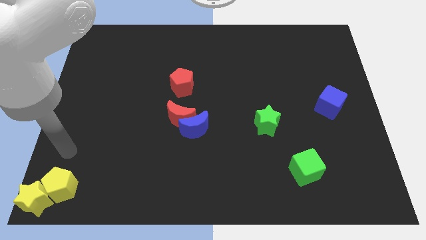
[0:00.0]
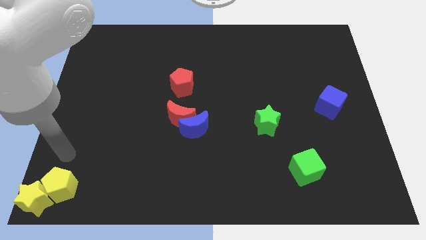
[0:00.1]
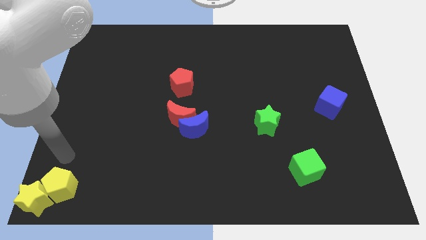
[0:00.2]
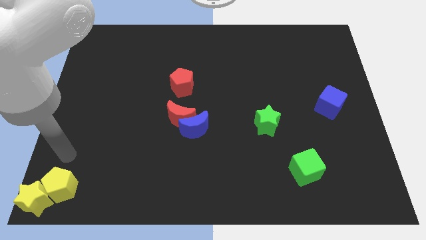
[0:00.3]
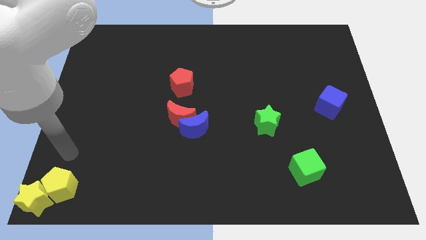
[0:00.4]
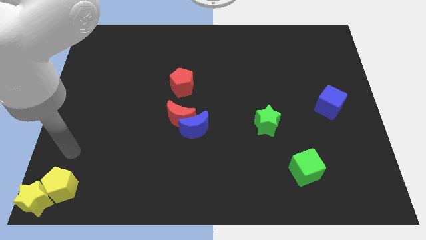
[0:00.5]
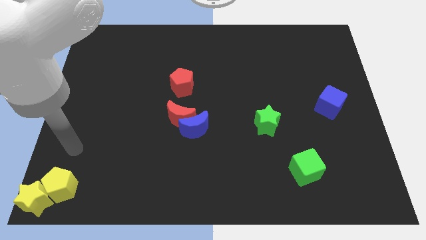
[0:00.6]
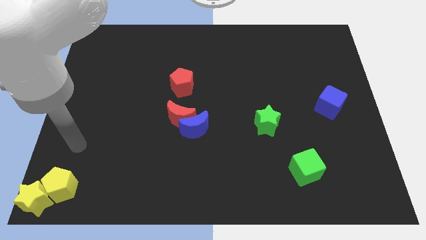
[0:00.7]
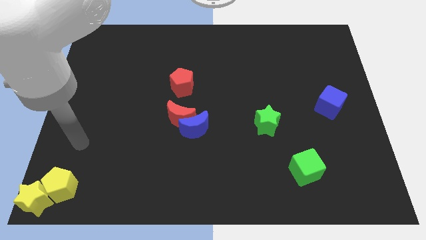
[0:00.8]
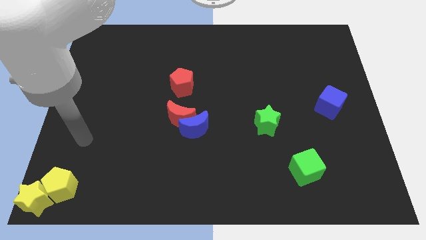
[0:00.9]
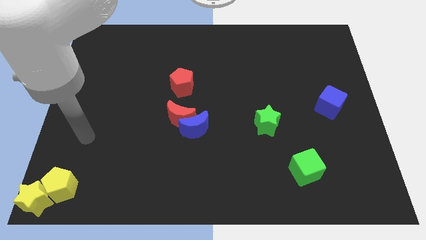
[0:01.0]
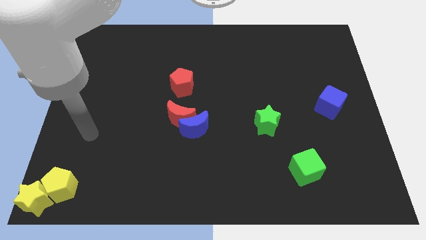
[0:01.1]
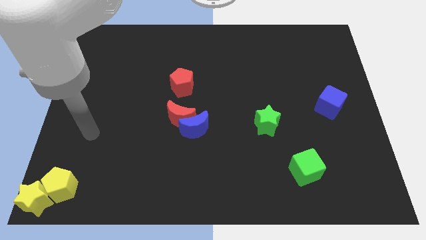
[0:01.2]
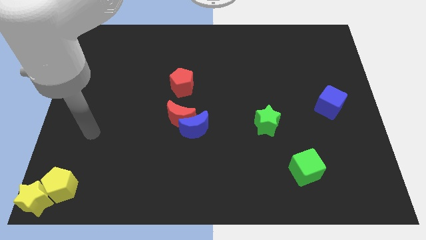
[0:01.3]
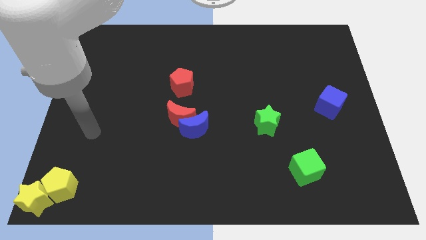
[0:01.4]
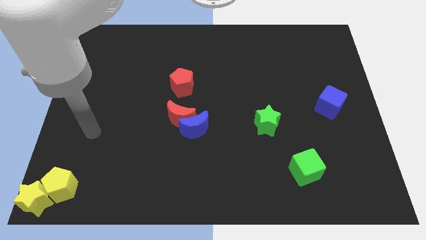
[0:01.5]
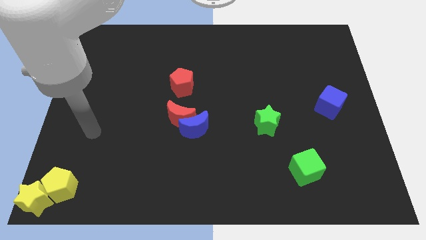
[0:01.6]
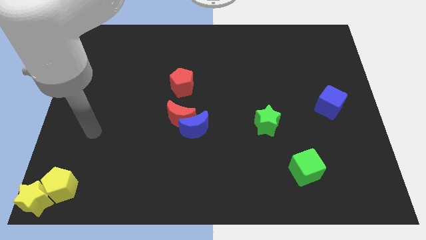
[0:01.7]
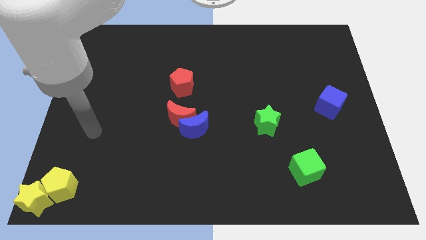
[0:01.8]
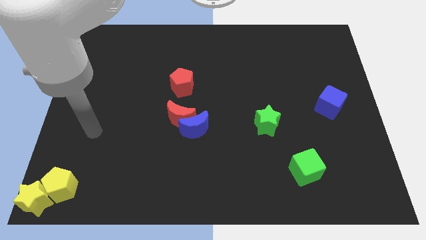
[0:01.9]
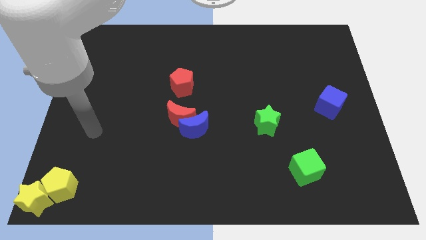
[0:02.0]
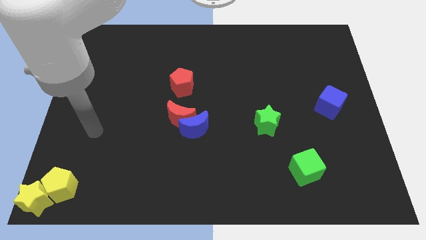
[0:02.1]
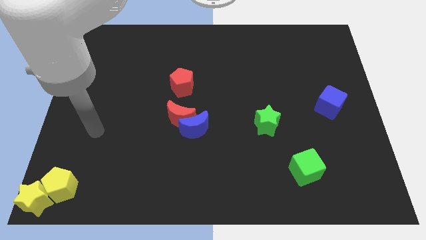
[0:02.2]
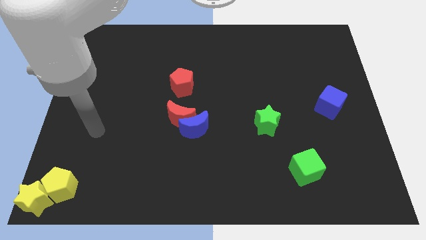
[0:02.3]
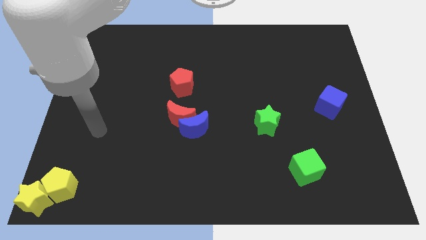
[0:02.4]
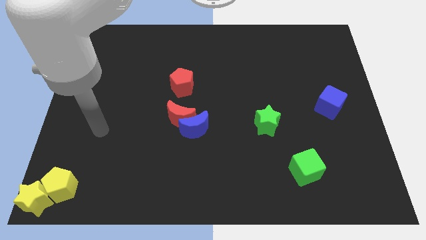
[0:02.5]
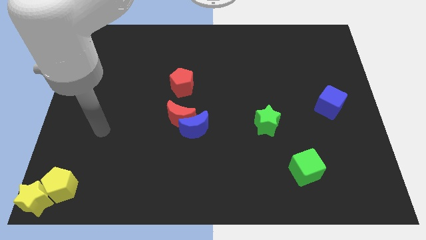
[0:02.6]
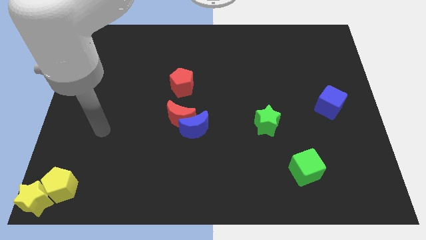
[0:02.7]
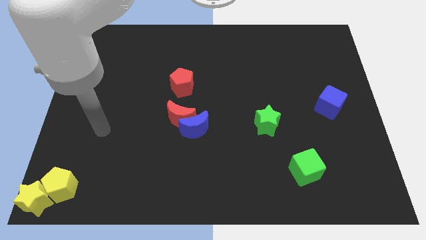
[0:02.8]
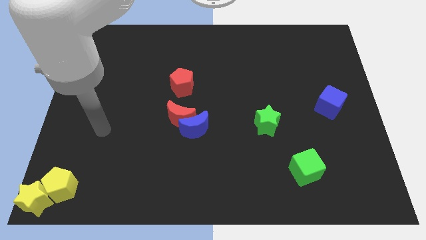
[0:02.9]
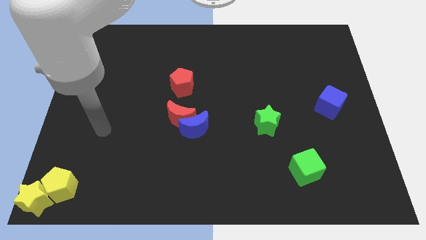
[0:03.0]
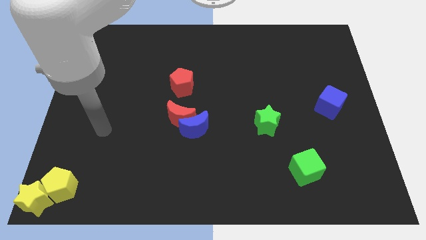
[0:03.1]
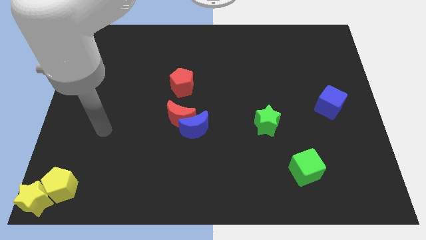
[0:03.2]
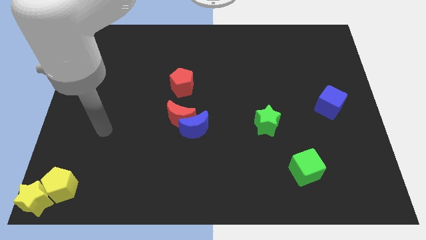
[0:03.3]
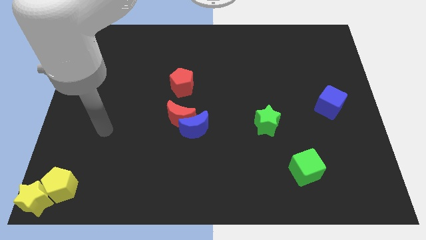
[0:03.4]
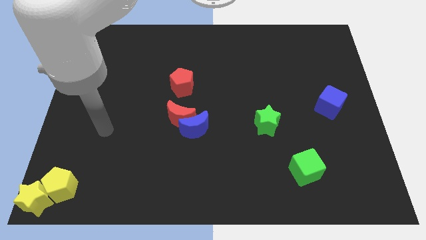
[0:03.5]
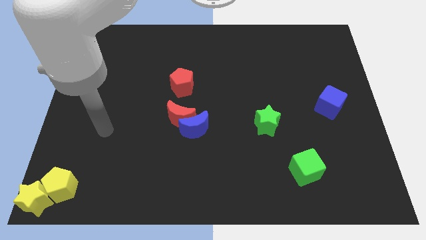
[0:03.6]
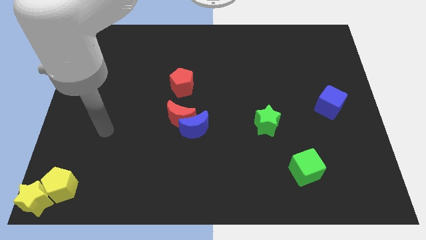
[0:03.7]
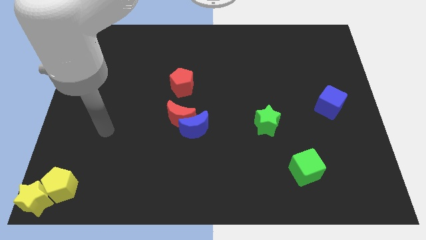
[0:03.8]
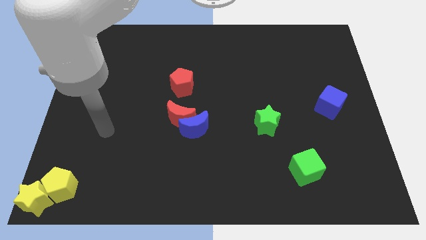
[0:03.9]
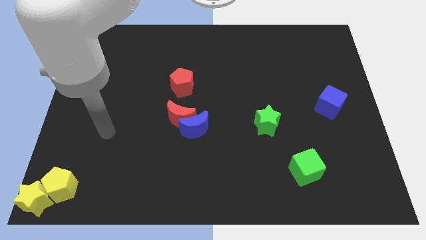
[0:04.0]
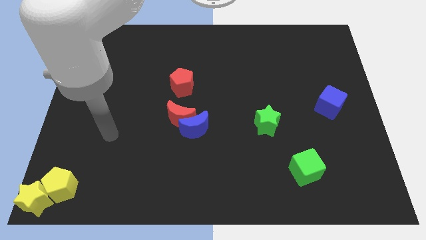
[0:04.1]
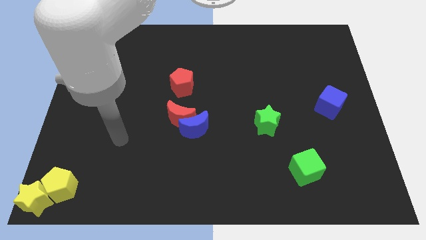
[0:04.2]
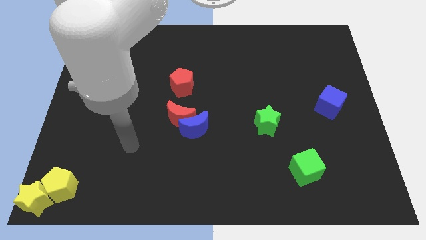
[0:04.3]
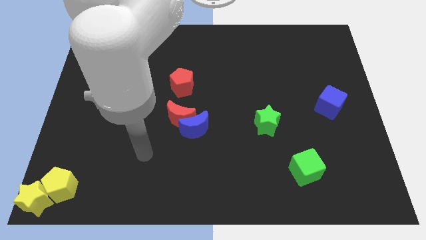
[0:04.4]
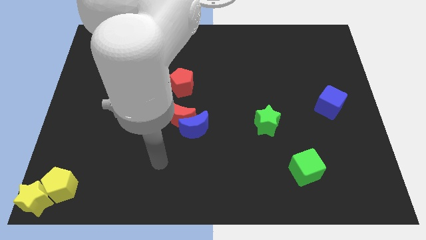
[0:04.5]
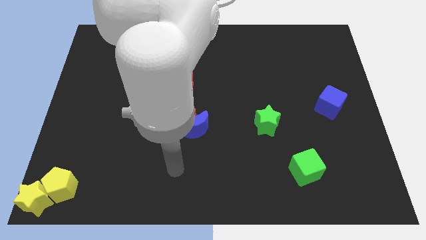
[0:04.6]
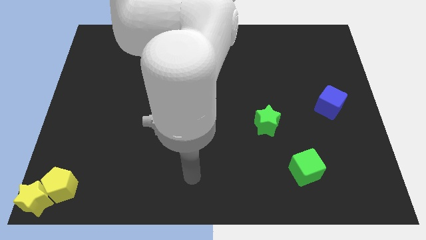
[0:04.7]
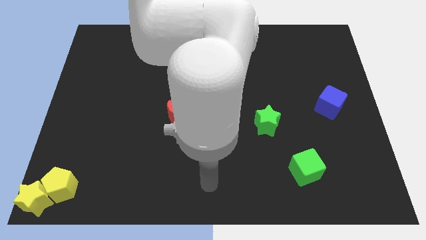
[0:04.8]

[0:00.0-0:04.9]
move the arm to the bottom center of the board

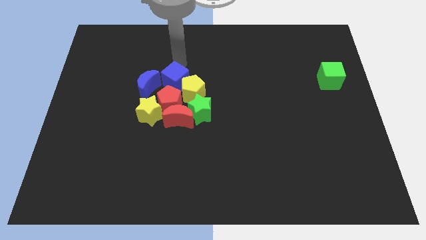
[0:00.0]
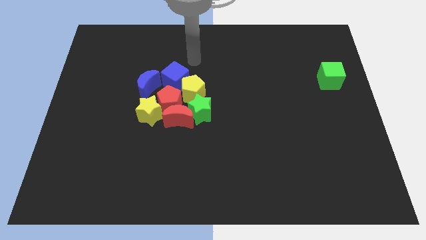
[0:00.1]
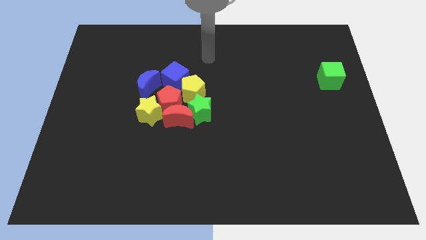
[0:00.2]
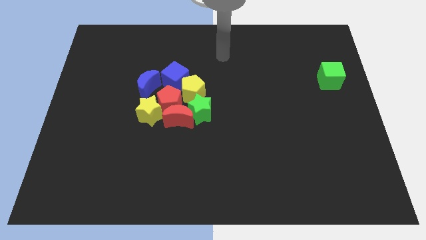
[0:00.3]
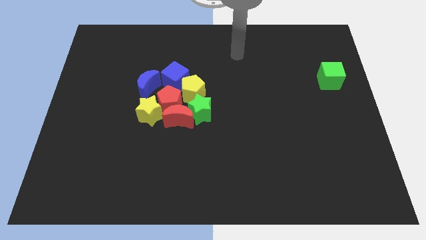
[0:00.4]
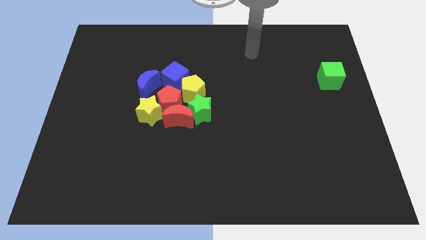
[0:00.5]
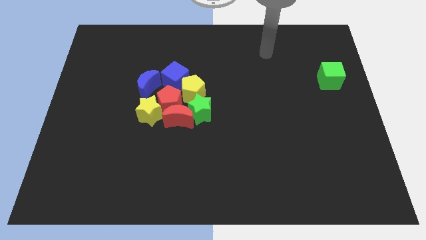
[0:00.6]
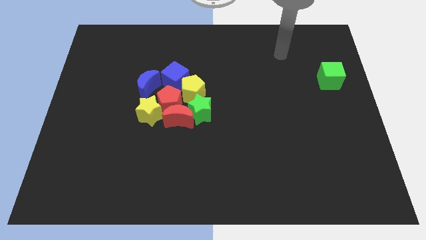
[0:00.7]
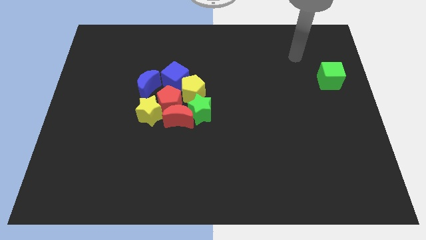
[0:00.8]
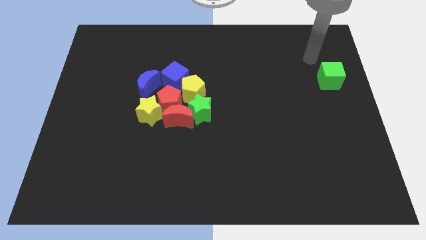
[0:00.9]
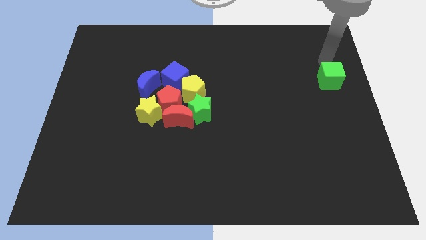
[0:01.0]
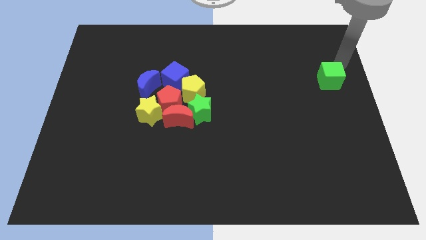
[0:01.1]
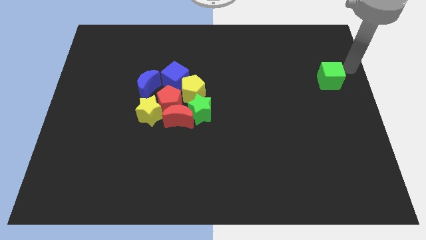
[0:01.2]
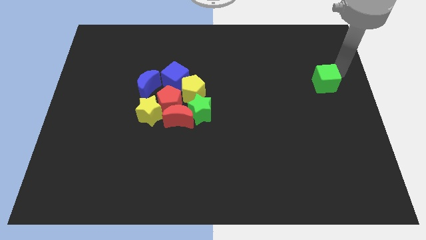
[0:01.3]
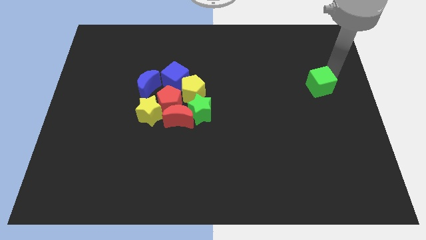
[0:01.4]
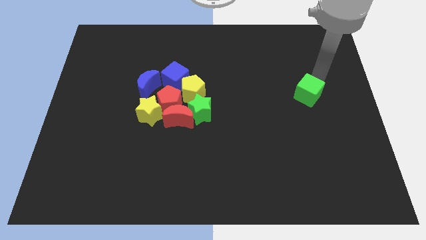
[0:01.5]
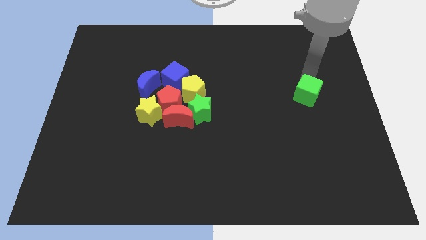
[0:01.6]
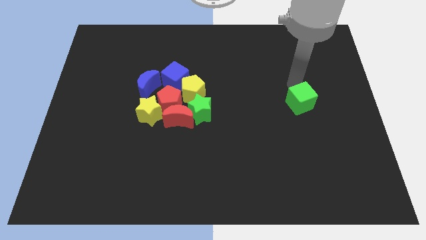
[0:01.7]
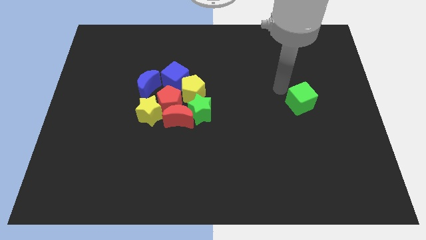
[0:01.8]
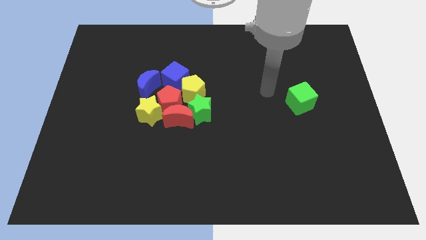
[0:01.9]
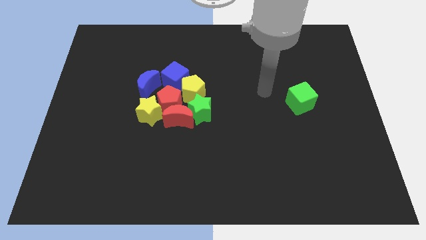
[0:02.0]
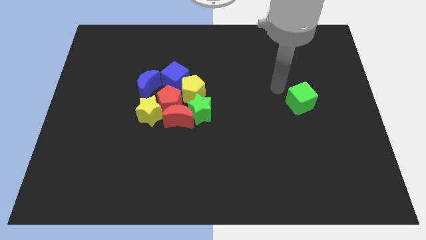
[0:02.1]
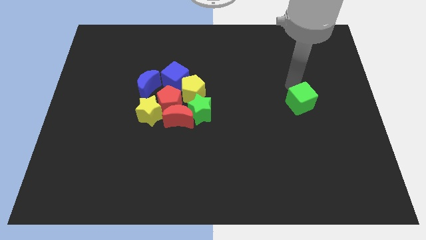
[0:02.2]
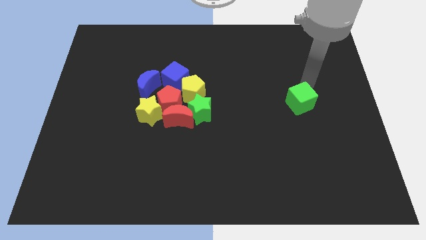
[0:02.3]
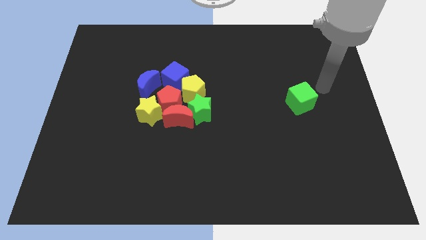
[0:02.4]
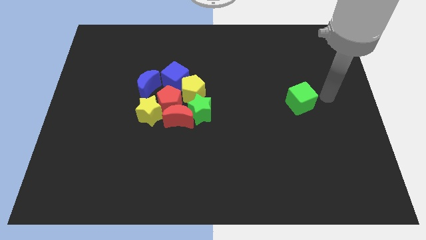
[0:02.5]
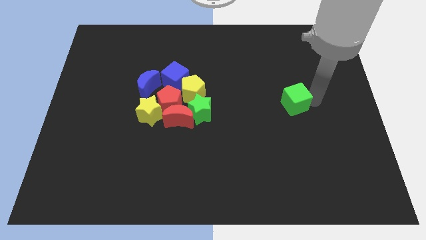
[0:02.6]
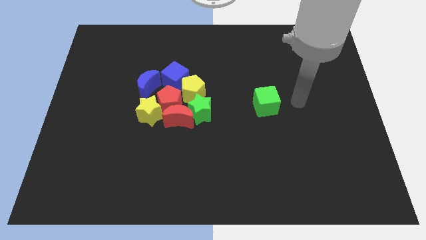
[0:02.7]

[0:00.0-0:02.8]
move your arm away from the blue moon

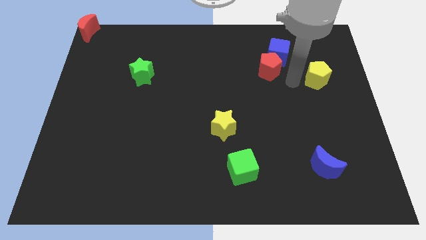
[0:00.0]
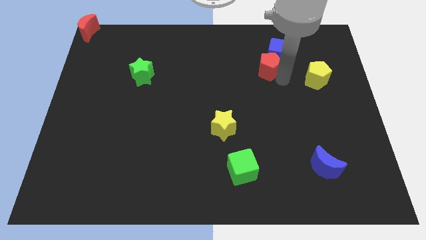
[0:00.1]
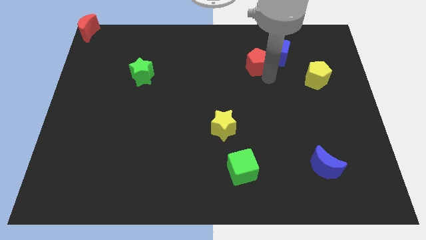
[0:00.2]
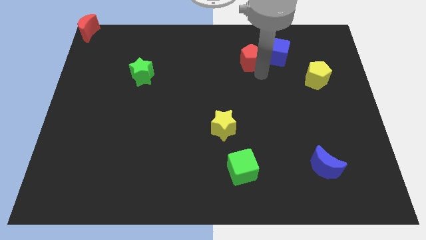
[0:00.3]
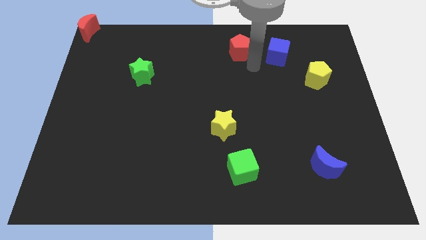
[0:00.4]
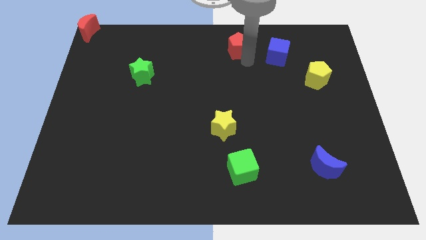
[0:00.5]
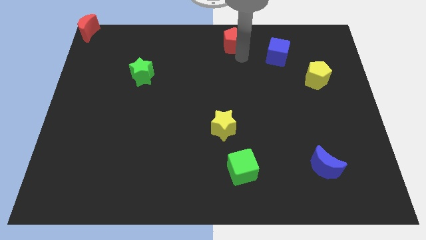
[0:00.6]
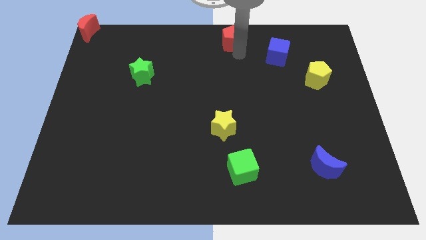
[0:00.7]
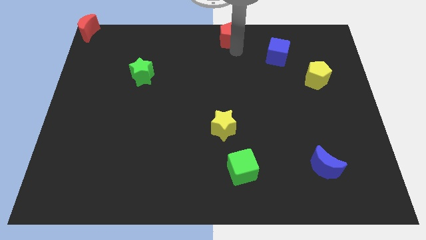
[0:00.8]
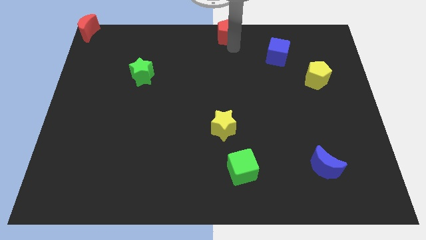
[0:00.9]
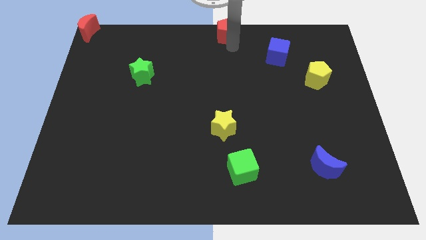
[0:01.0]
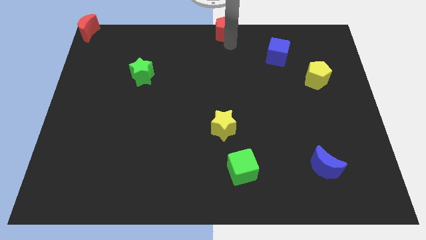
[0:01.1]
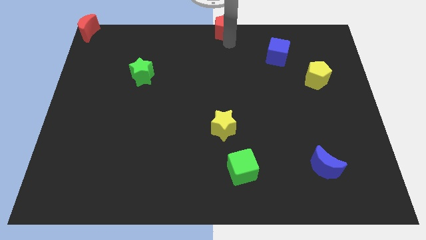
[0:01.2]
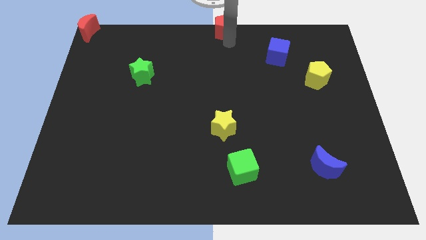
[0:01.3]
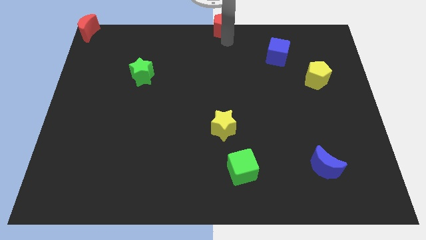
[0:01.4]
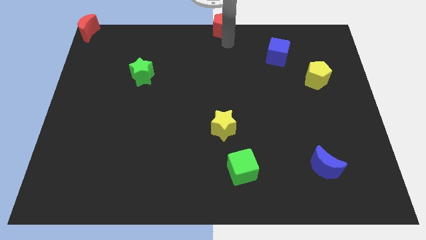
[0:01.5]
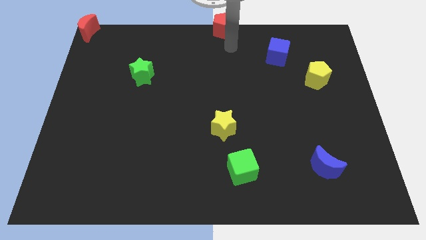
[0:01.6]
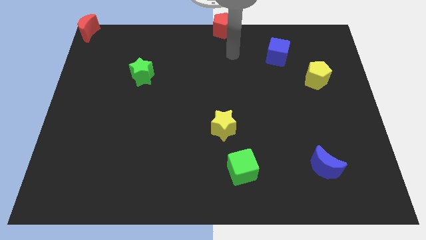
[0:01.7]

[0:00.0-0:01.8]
push the red pentagon to the top center of the board
